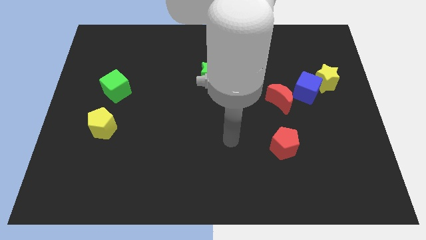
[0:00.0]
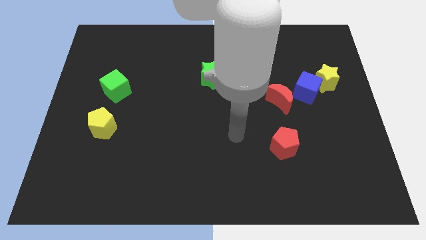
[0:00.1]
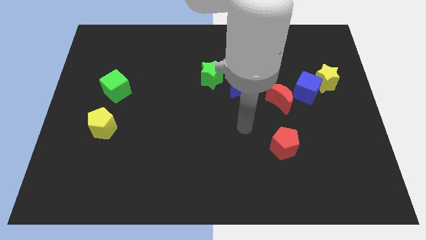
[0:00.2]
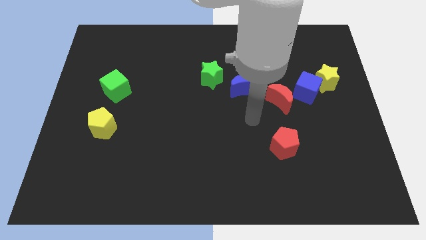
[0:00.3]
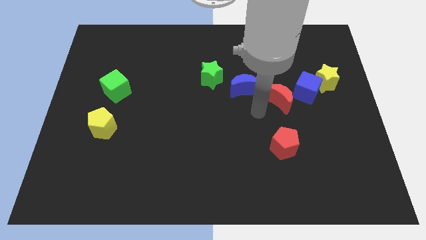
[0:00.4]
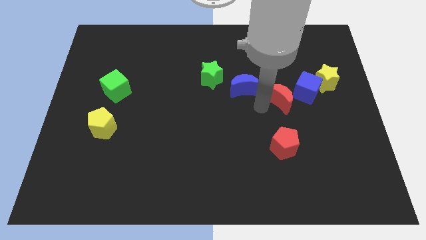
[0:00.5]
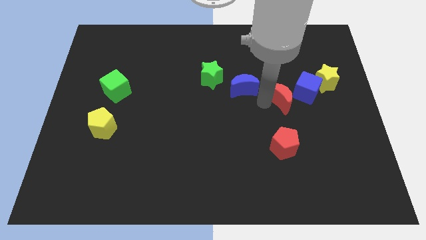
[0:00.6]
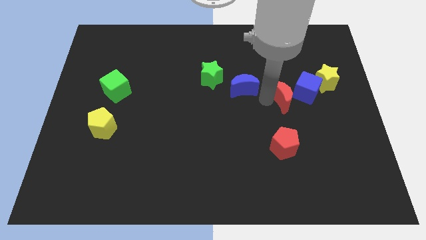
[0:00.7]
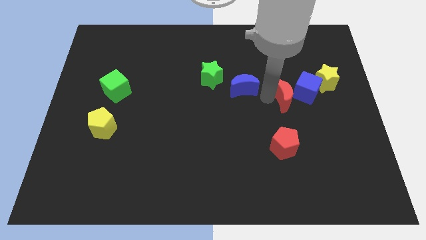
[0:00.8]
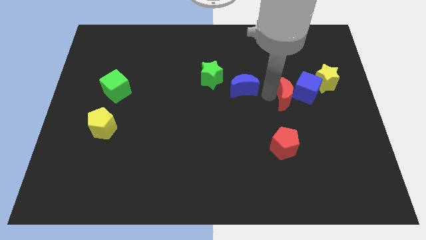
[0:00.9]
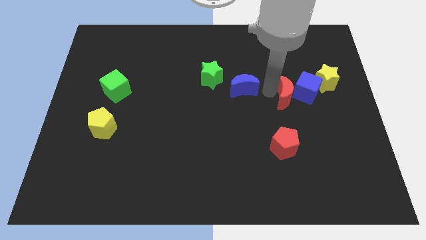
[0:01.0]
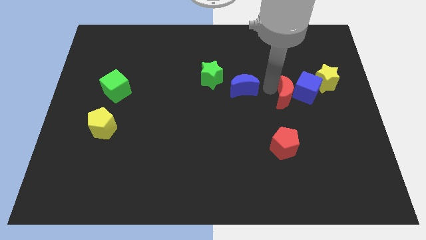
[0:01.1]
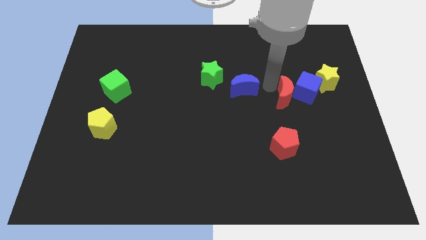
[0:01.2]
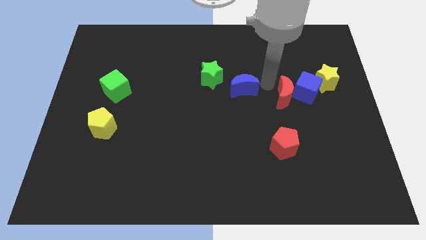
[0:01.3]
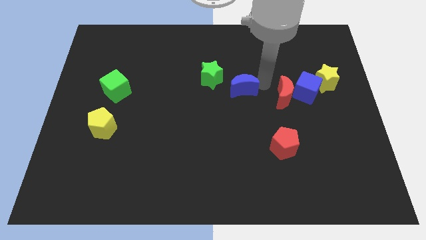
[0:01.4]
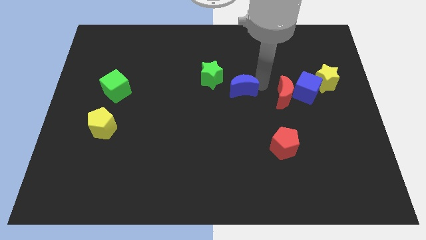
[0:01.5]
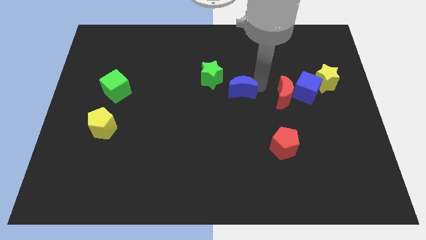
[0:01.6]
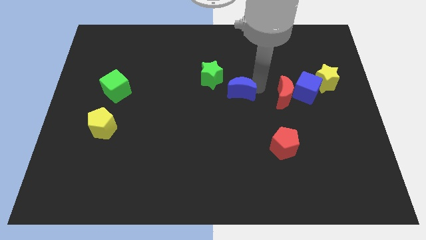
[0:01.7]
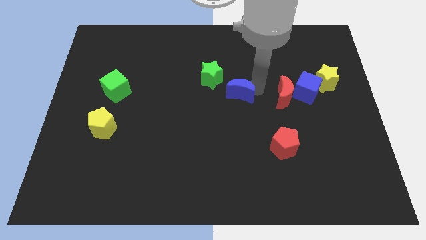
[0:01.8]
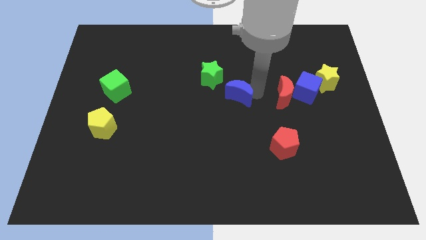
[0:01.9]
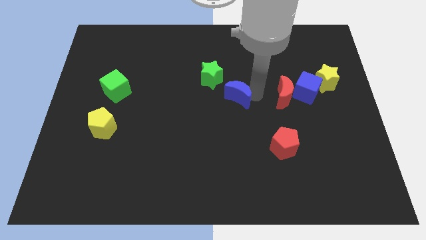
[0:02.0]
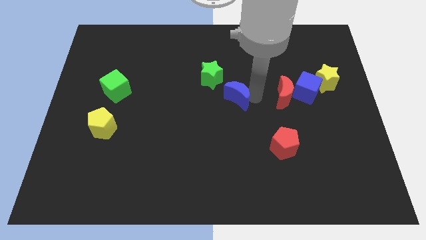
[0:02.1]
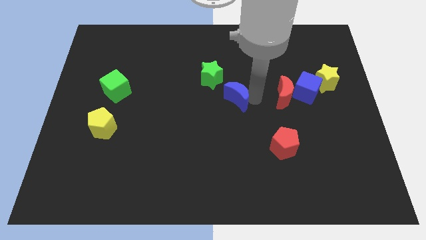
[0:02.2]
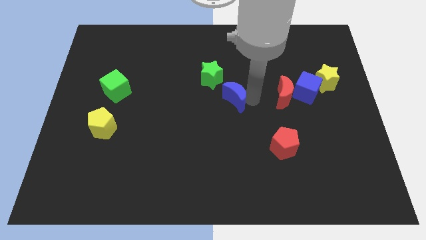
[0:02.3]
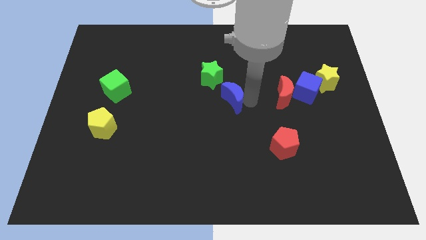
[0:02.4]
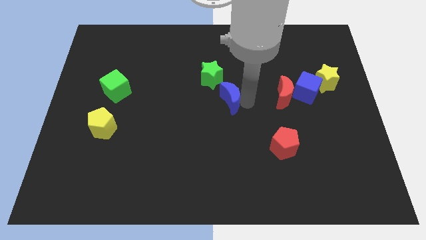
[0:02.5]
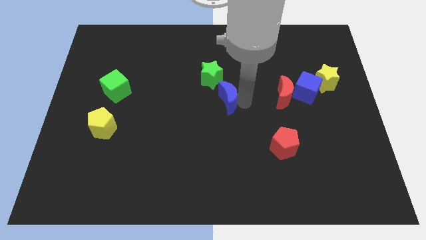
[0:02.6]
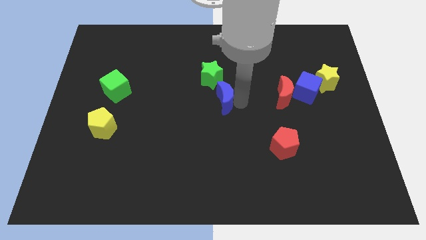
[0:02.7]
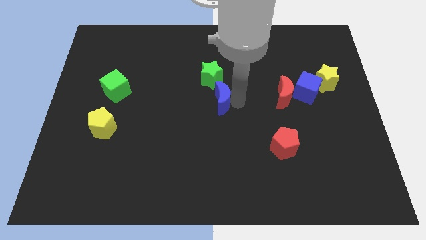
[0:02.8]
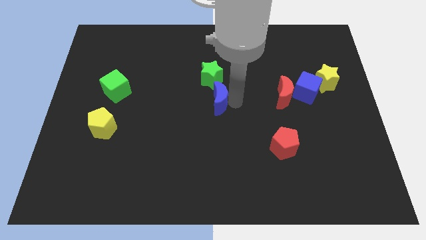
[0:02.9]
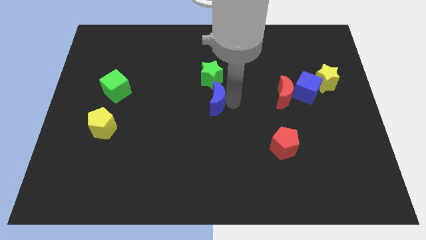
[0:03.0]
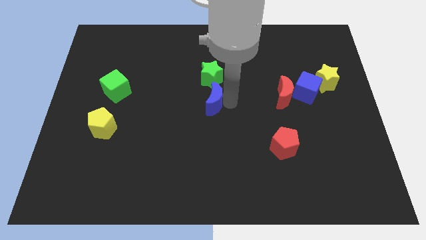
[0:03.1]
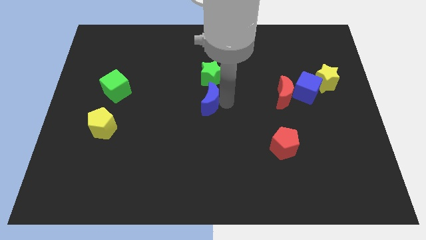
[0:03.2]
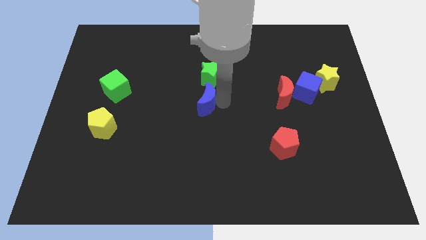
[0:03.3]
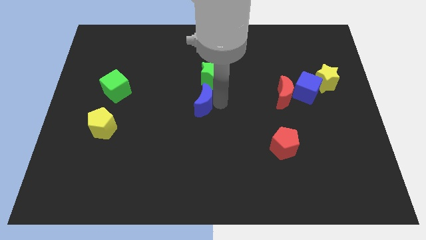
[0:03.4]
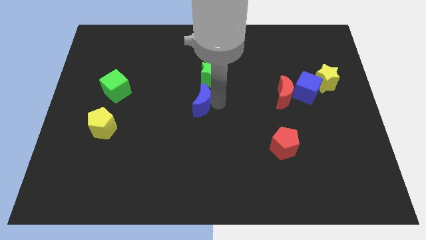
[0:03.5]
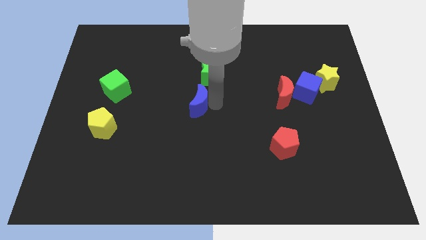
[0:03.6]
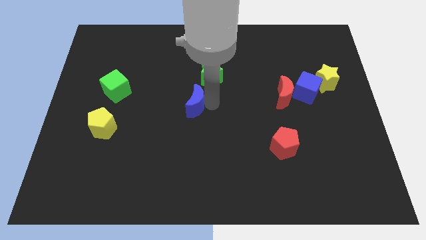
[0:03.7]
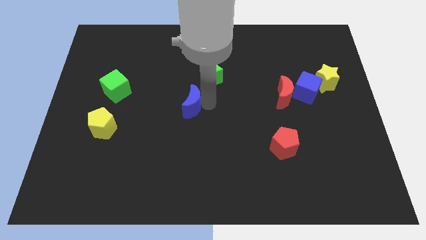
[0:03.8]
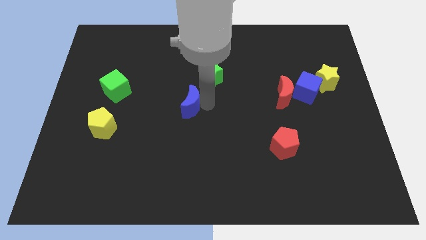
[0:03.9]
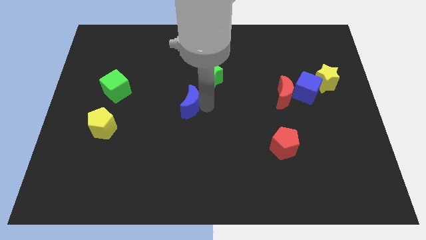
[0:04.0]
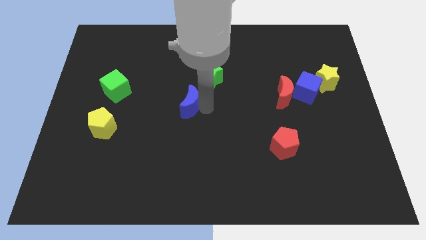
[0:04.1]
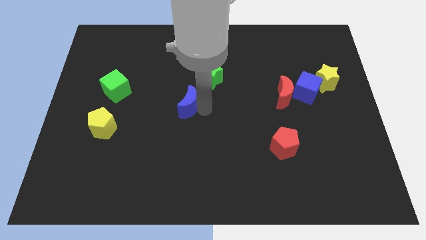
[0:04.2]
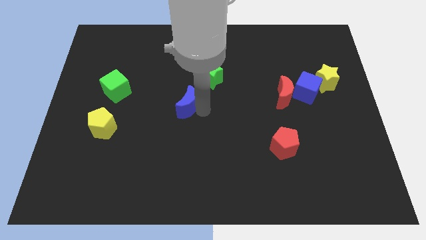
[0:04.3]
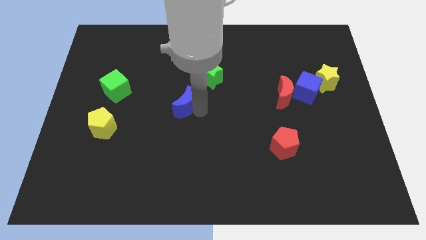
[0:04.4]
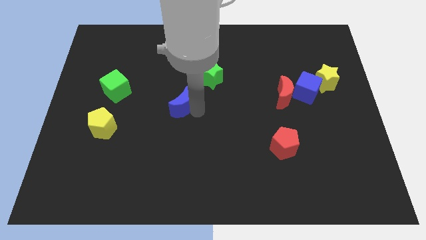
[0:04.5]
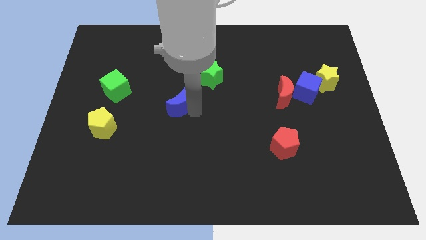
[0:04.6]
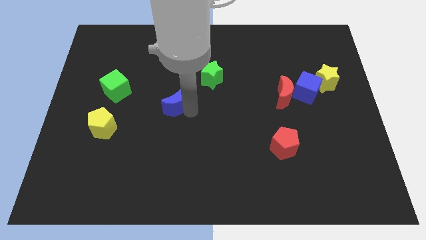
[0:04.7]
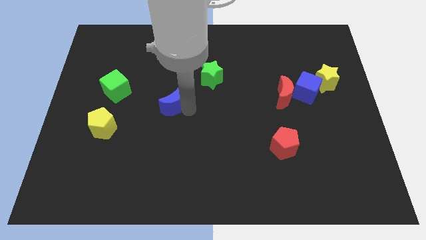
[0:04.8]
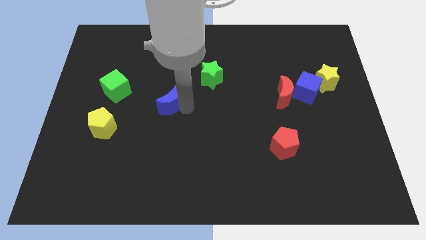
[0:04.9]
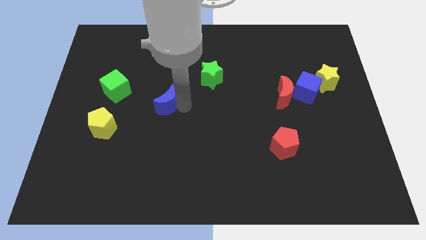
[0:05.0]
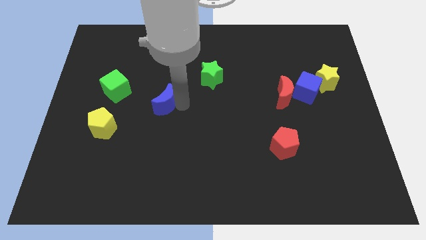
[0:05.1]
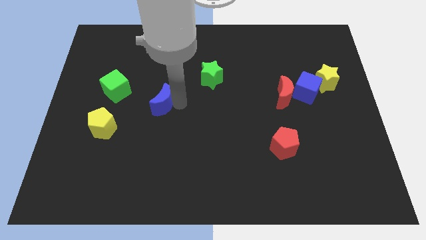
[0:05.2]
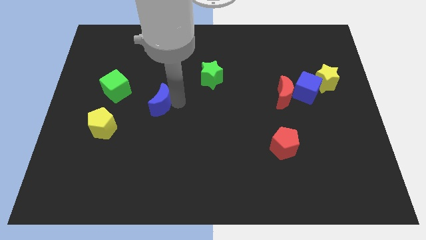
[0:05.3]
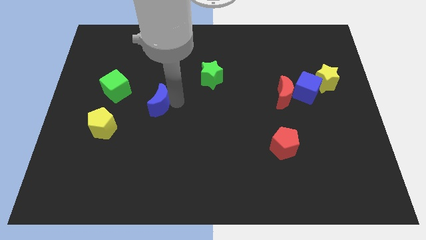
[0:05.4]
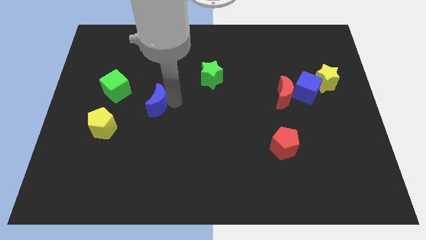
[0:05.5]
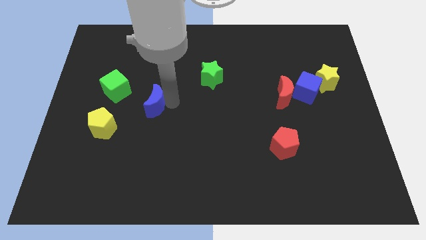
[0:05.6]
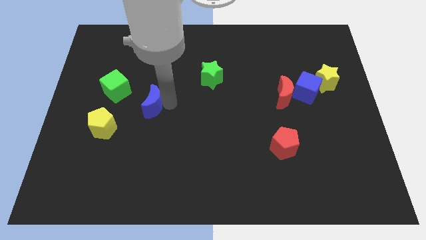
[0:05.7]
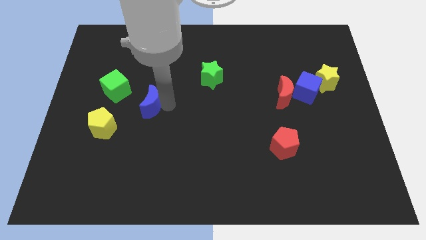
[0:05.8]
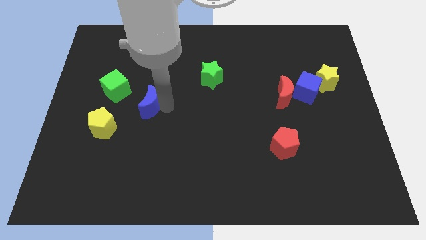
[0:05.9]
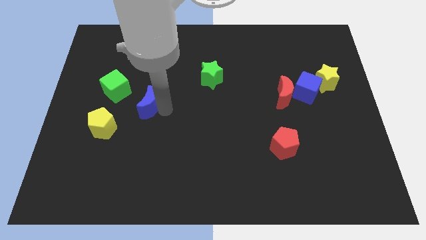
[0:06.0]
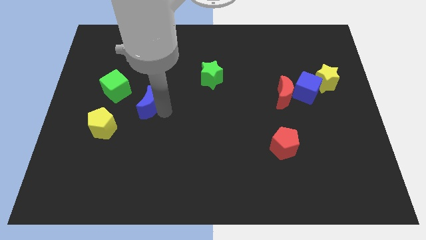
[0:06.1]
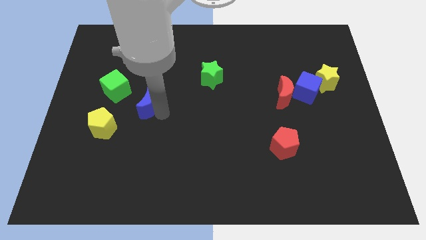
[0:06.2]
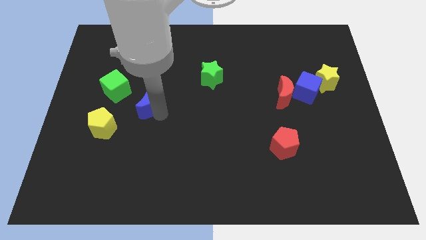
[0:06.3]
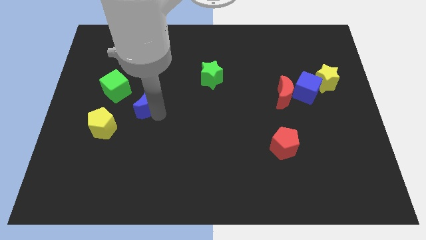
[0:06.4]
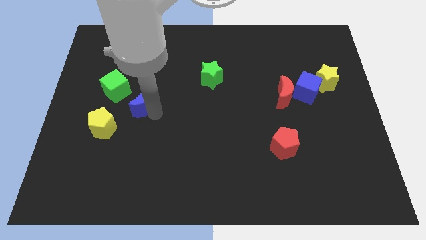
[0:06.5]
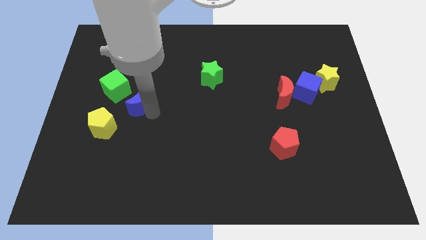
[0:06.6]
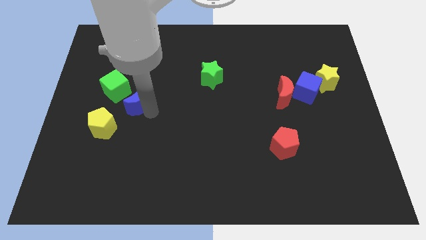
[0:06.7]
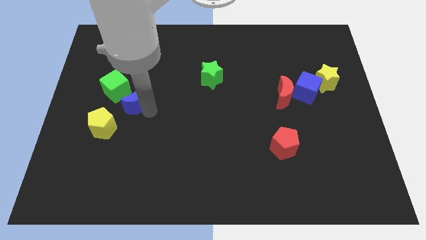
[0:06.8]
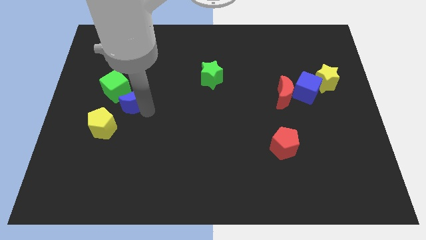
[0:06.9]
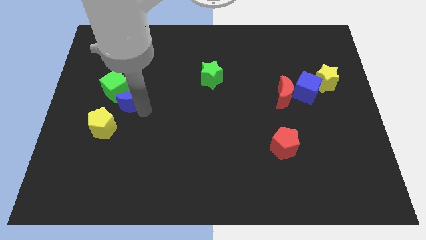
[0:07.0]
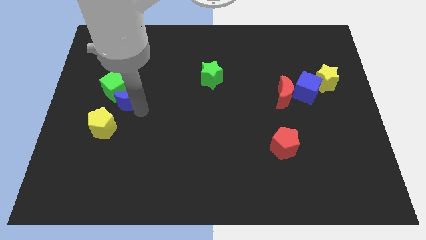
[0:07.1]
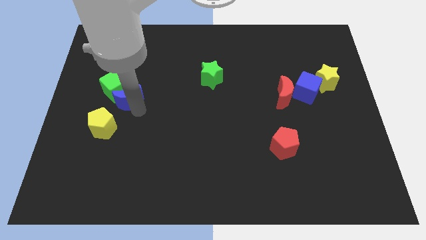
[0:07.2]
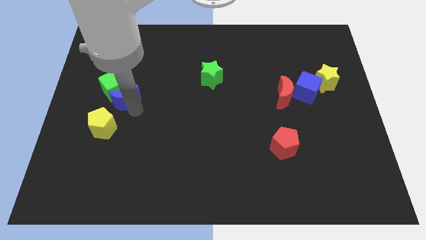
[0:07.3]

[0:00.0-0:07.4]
push the blue moon next to the green cube

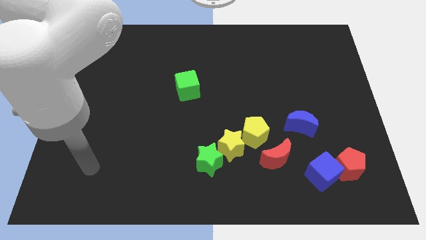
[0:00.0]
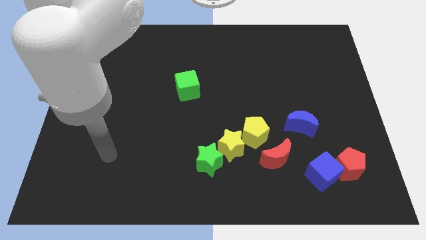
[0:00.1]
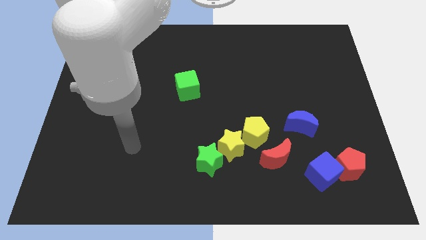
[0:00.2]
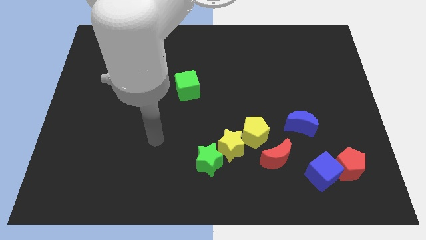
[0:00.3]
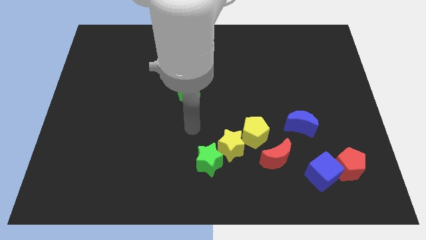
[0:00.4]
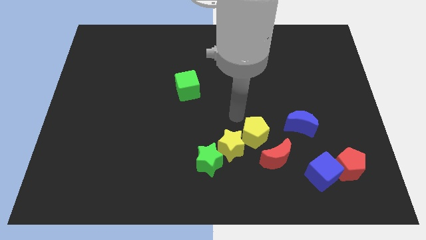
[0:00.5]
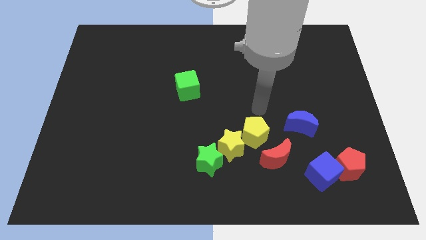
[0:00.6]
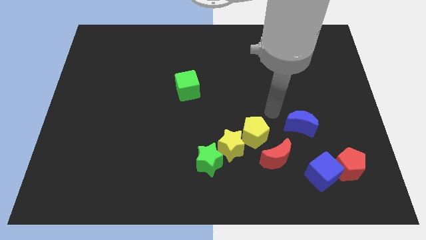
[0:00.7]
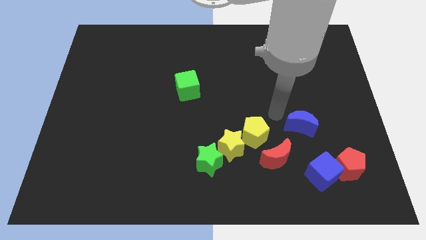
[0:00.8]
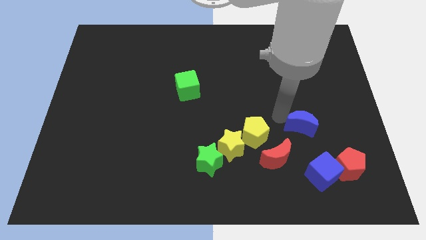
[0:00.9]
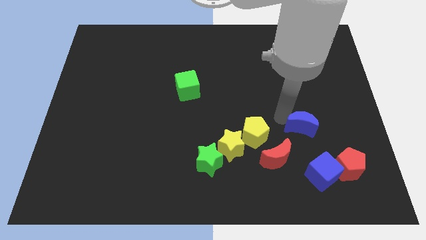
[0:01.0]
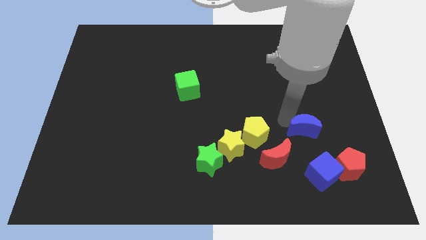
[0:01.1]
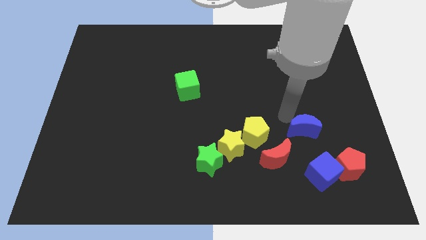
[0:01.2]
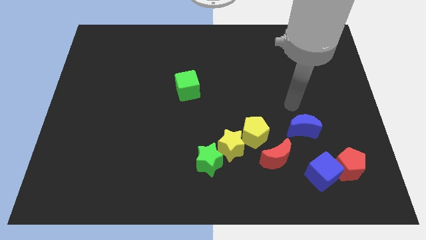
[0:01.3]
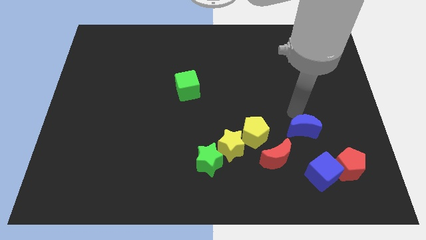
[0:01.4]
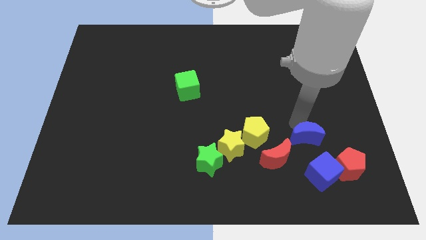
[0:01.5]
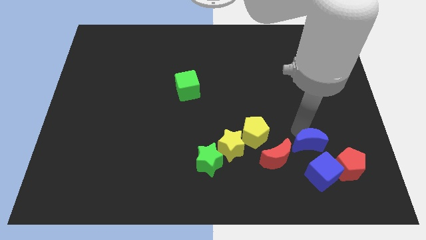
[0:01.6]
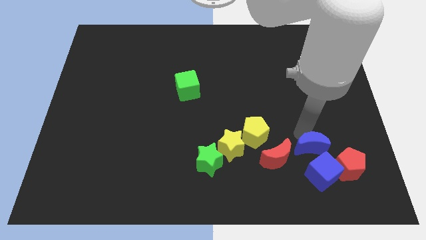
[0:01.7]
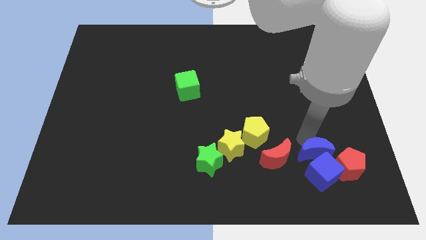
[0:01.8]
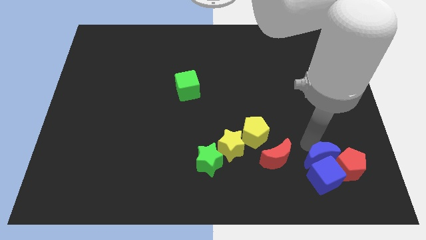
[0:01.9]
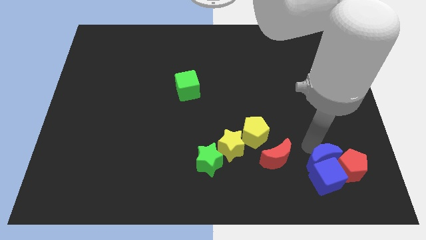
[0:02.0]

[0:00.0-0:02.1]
push the blue moon close to the blue cube
